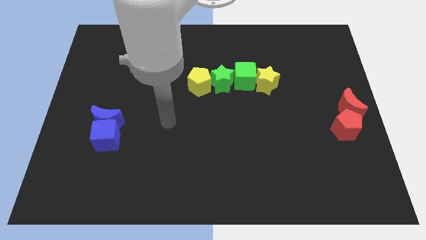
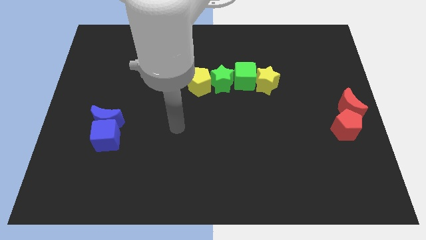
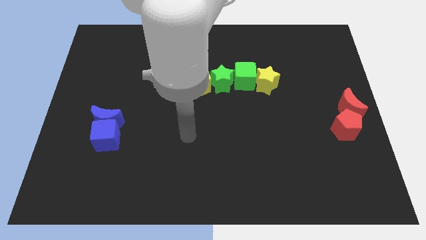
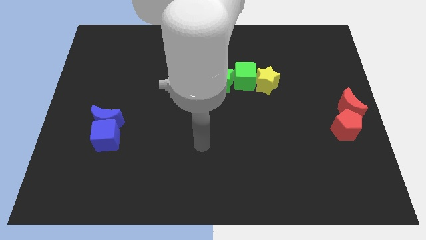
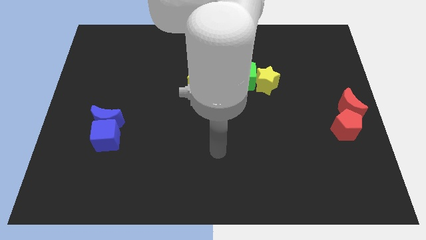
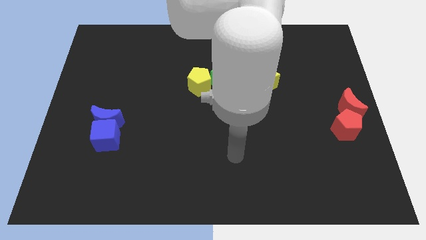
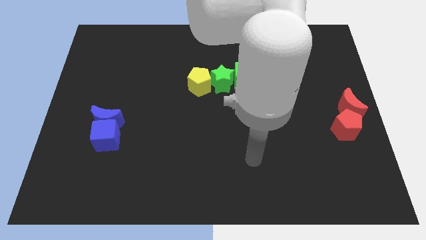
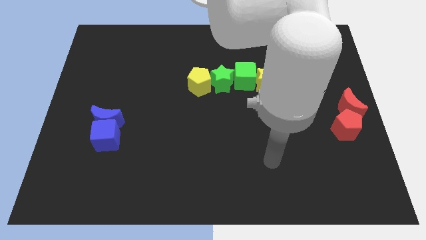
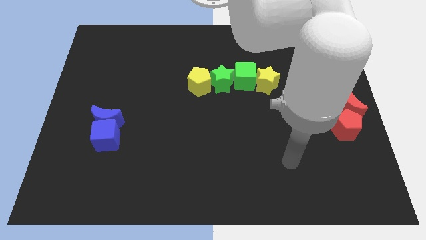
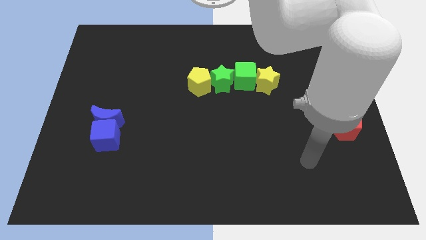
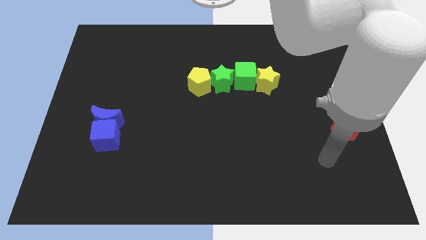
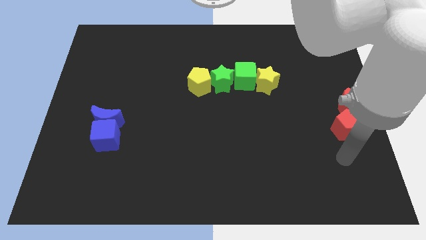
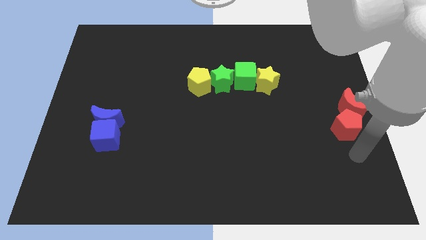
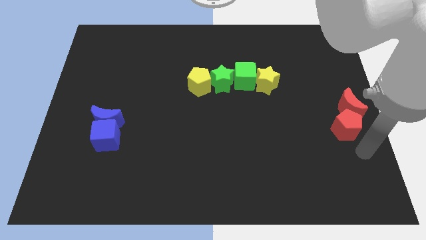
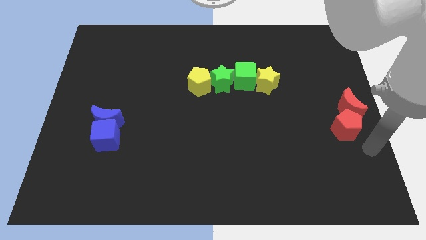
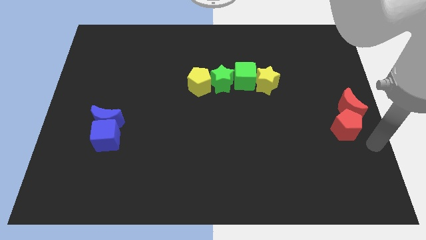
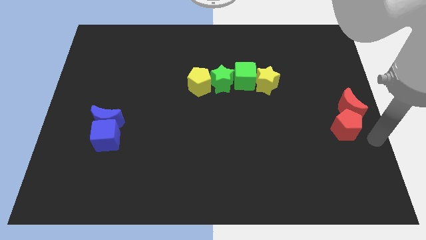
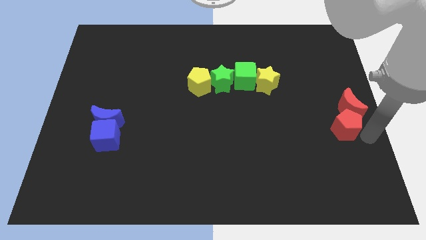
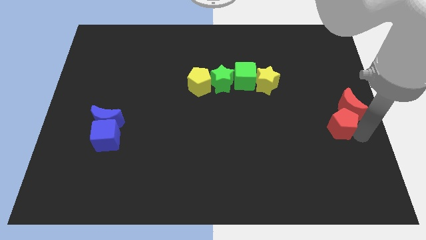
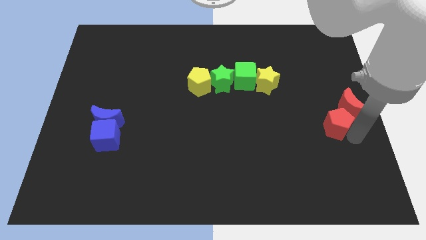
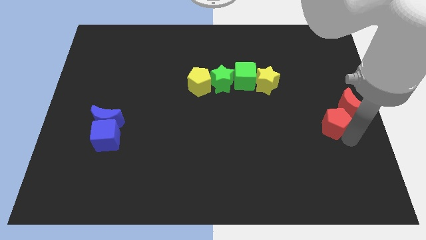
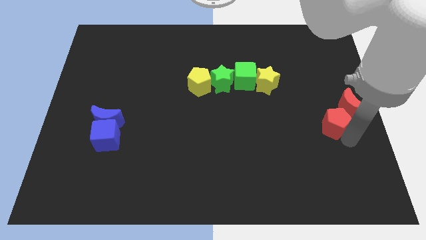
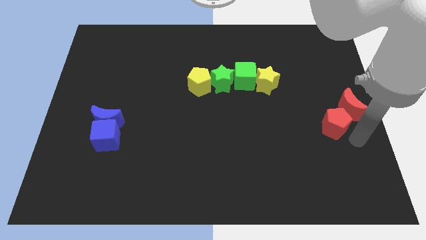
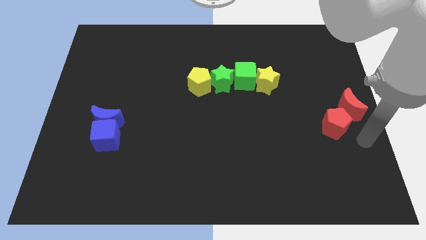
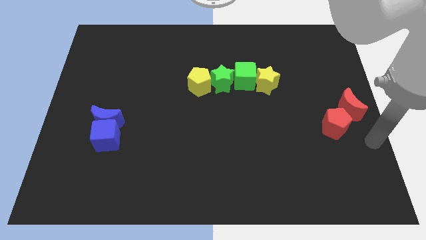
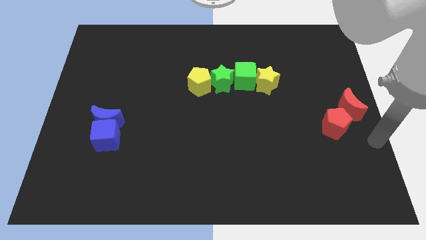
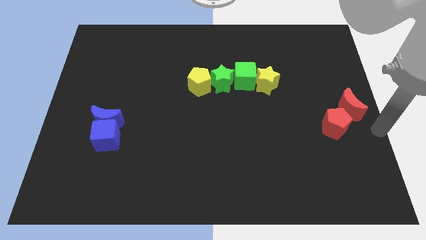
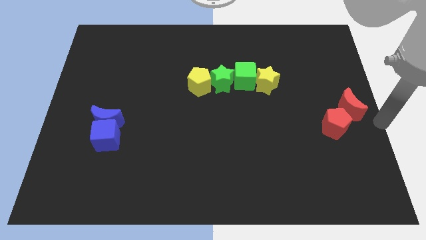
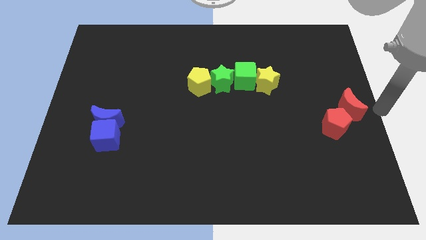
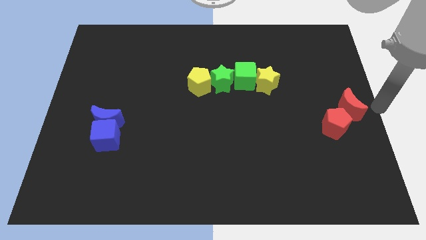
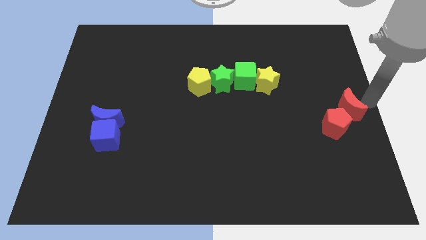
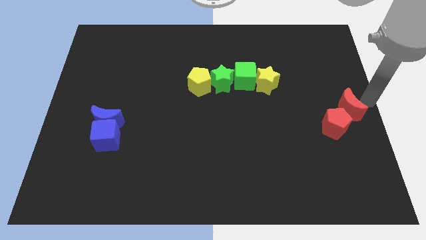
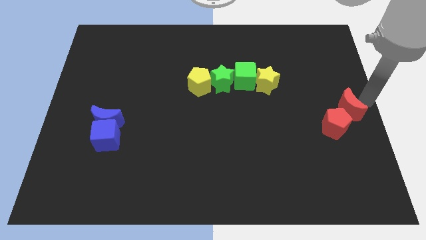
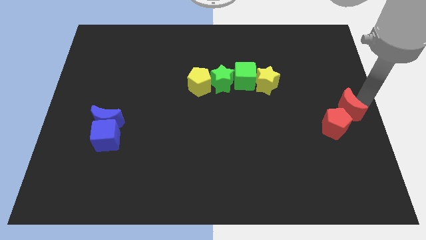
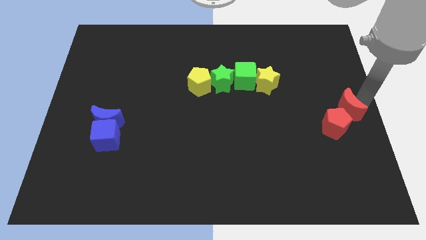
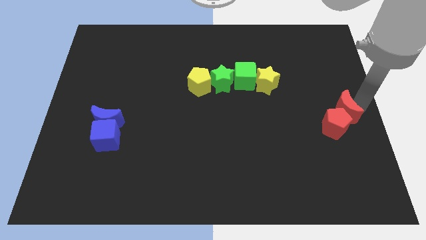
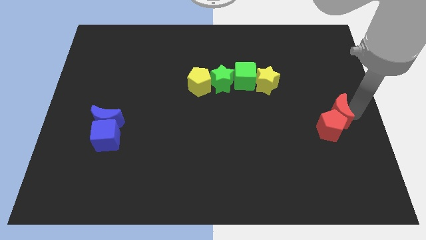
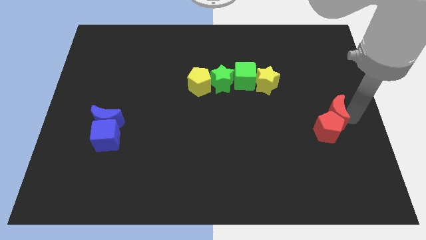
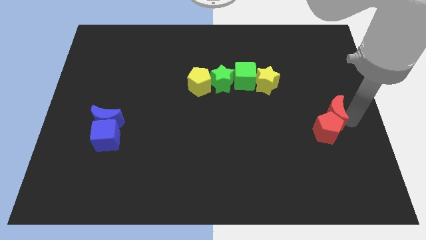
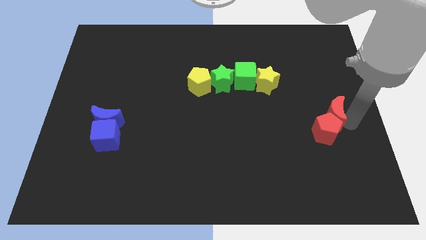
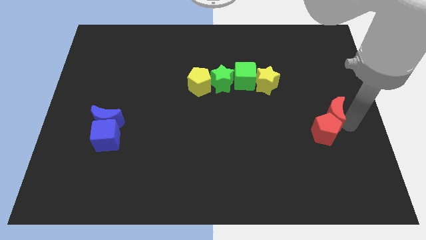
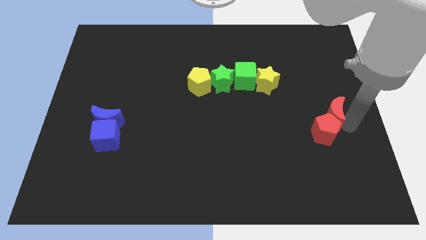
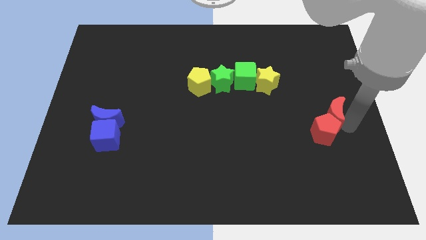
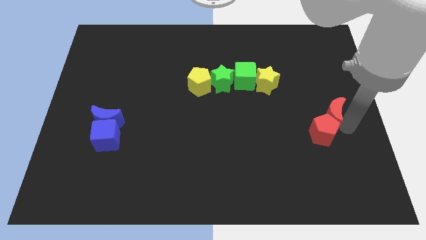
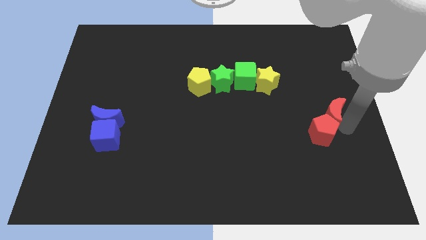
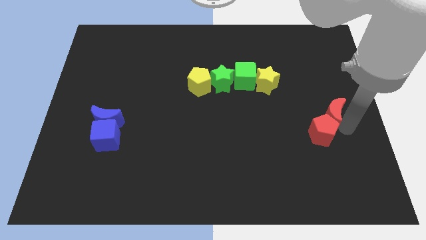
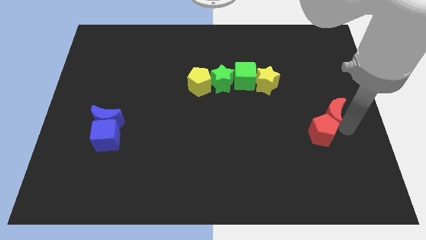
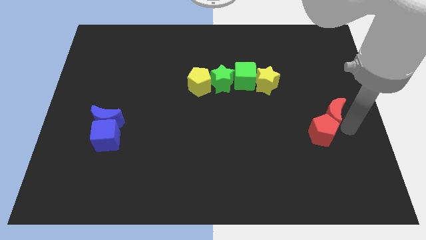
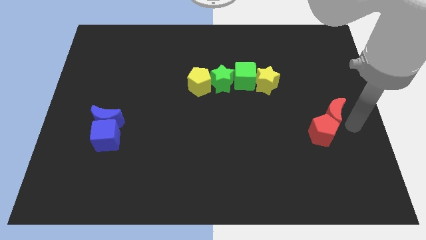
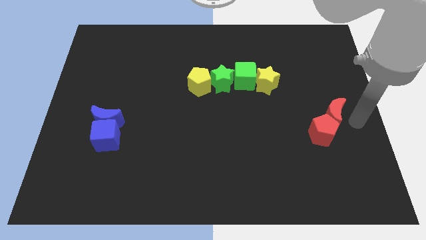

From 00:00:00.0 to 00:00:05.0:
push the red moon into the red pentagon

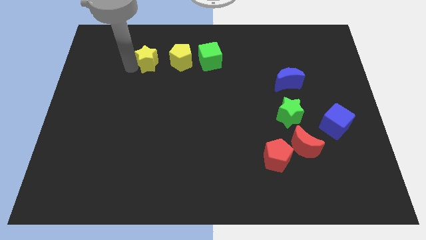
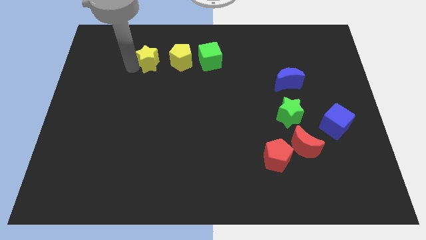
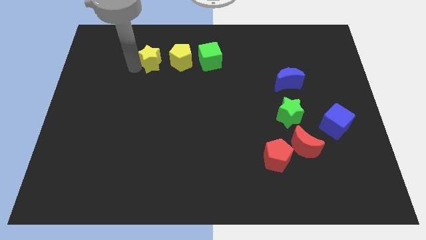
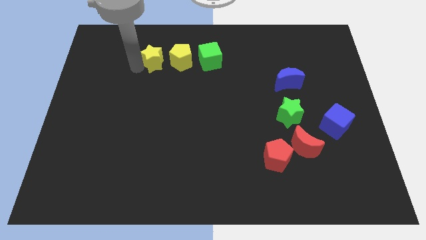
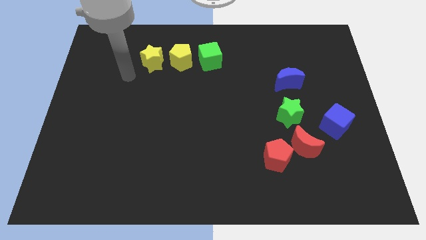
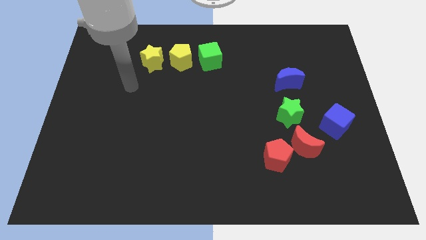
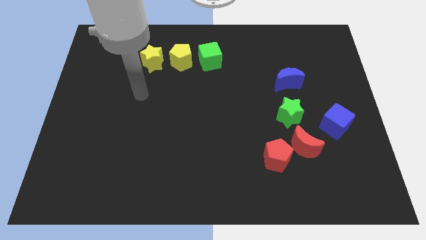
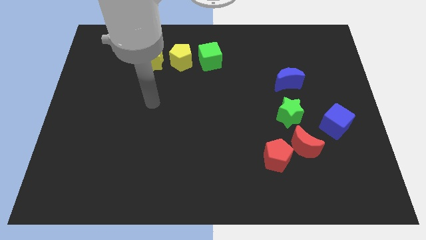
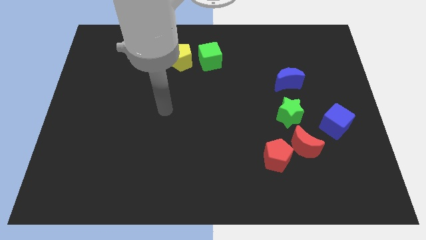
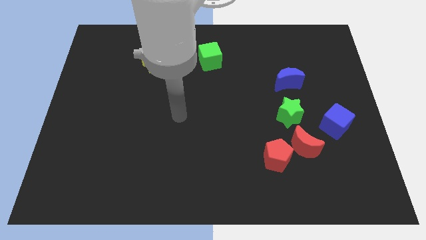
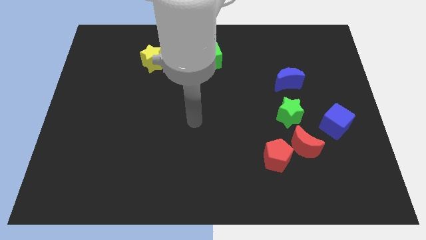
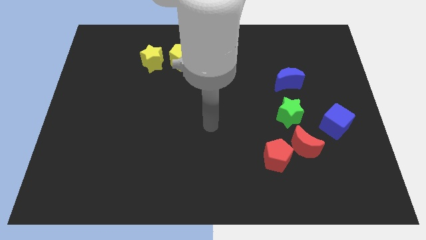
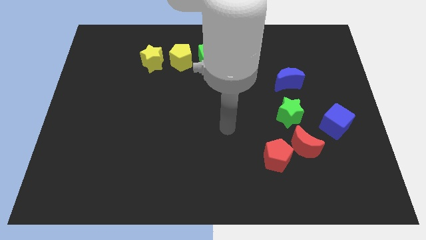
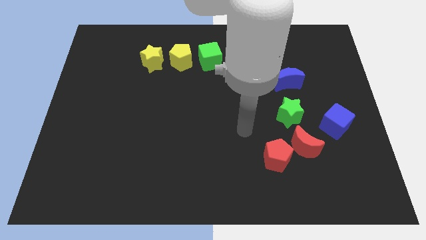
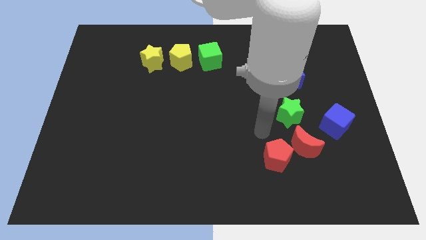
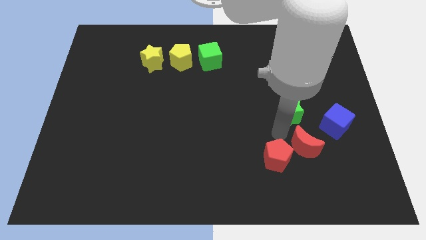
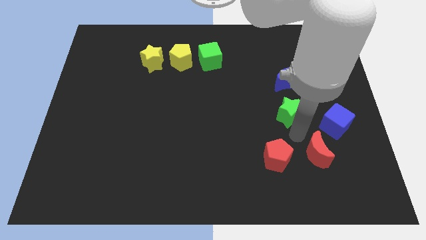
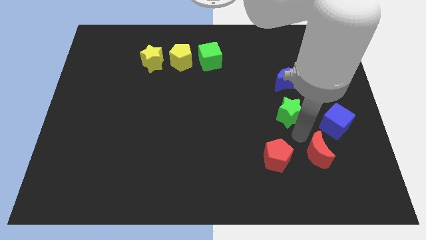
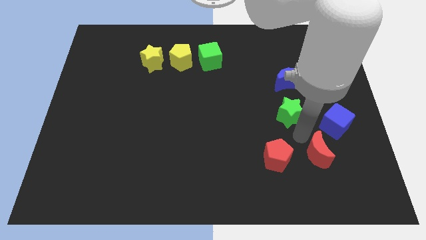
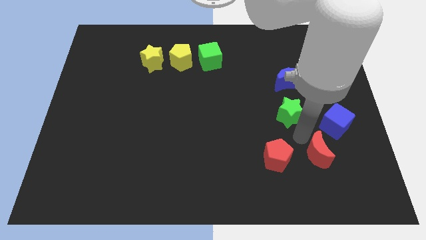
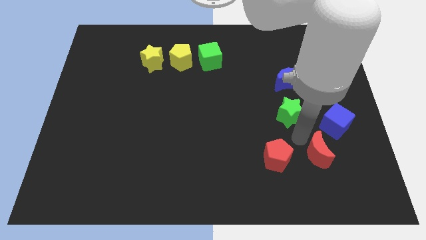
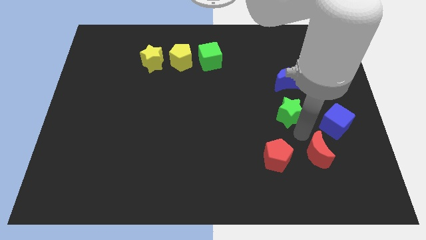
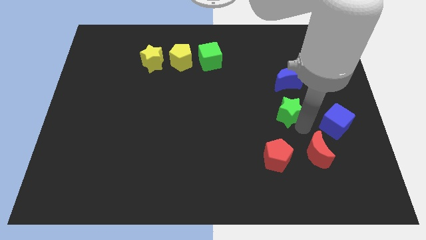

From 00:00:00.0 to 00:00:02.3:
move your arm from yellow star to the green star

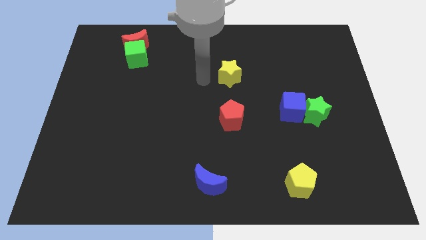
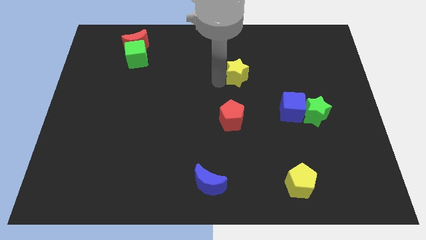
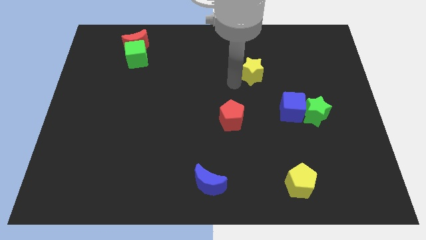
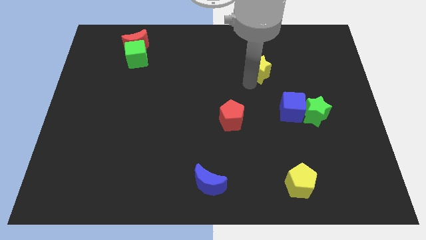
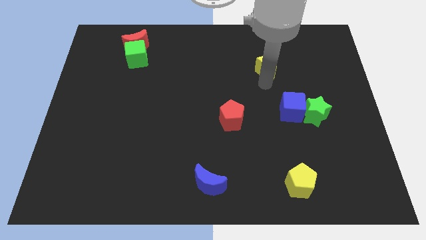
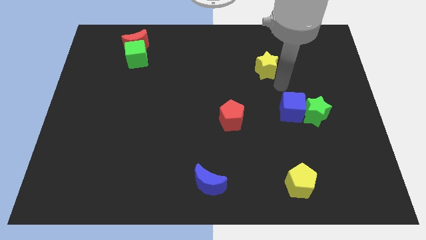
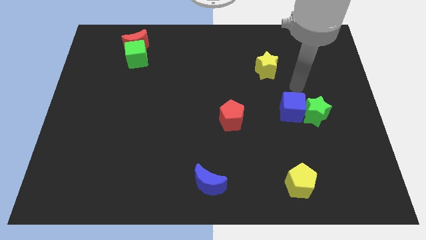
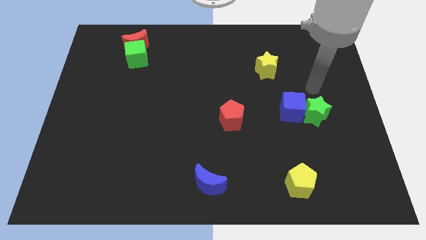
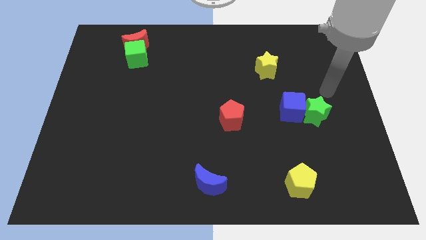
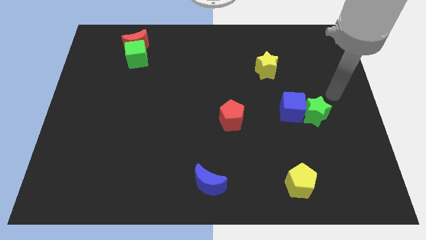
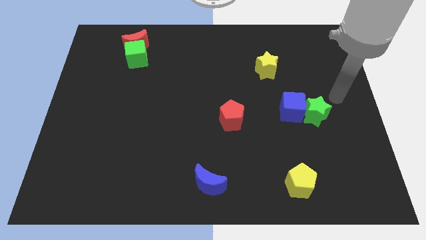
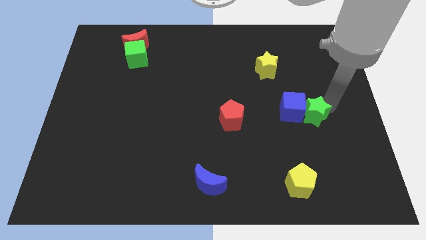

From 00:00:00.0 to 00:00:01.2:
slide the yellow star diagonally top right to the red pentagon

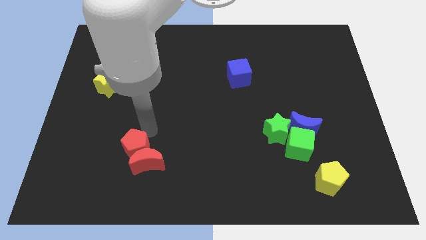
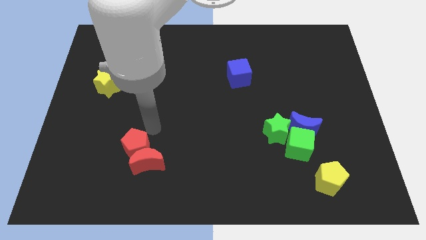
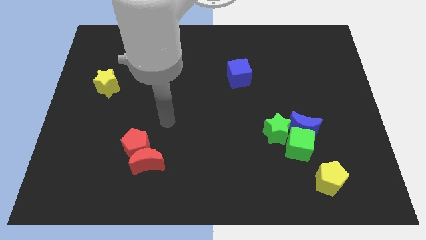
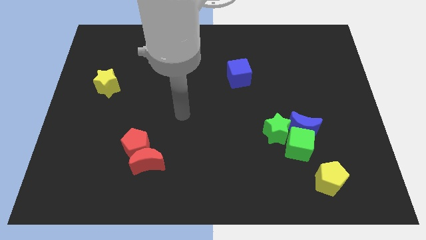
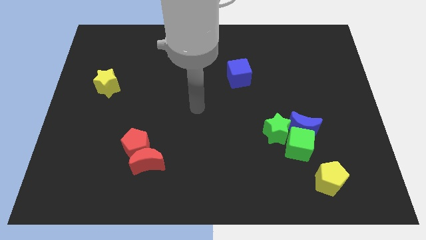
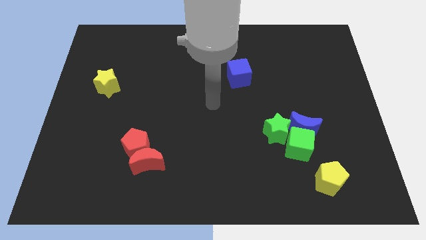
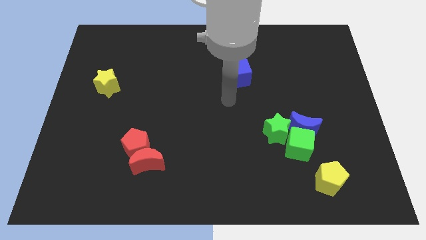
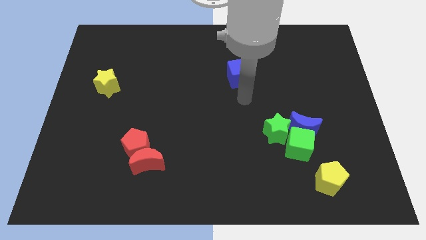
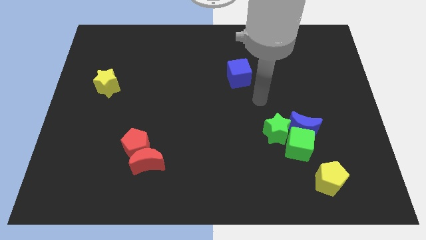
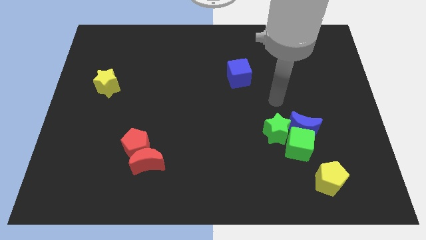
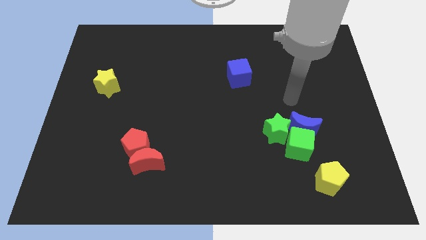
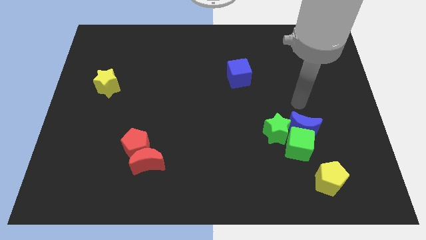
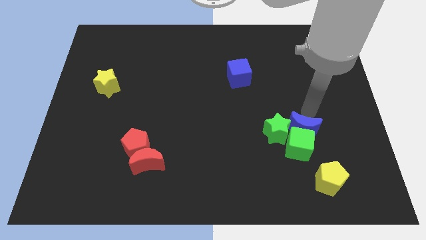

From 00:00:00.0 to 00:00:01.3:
point your arm at the top of the blue crescent
